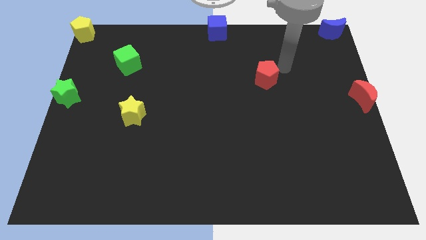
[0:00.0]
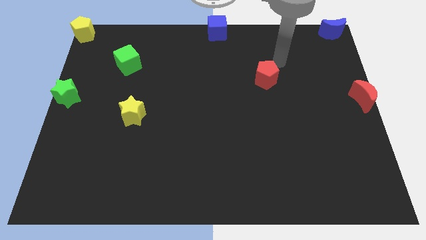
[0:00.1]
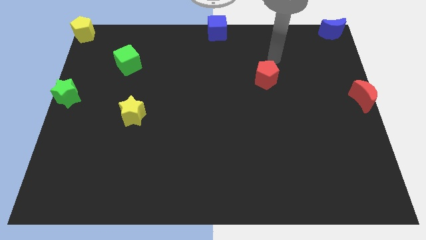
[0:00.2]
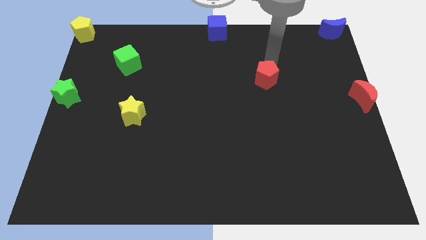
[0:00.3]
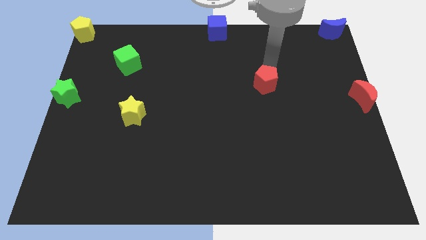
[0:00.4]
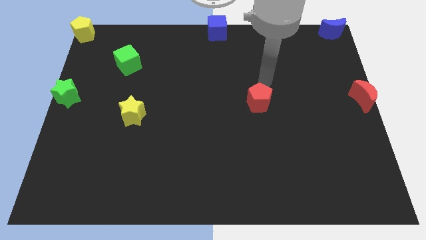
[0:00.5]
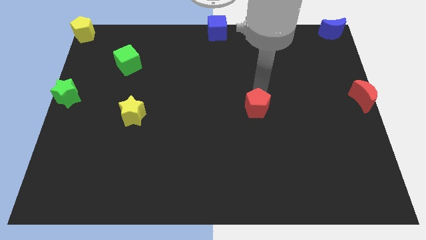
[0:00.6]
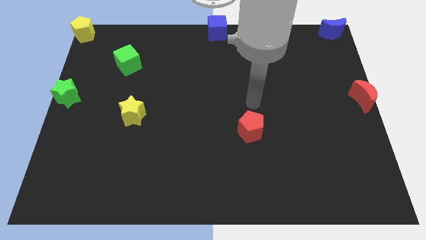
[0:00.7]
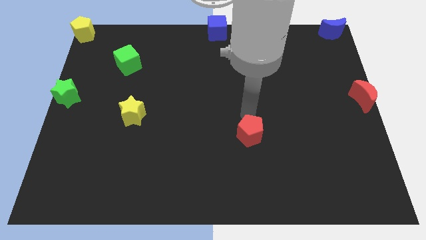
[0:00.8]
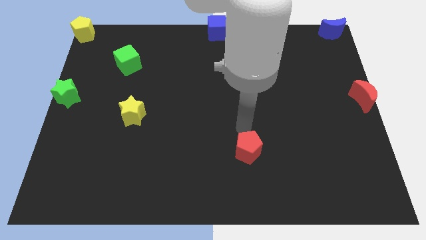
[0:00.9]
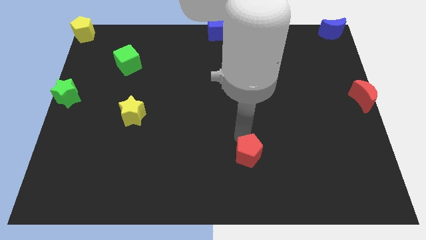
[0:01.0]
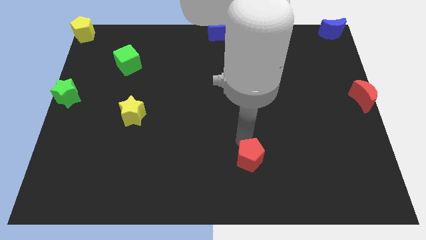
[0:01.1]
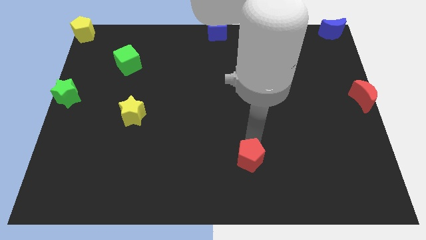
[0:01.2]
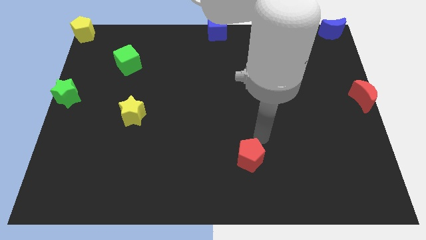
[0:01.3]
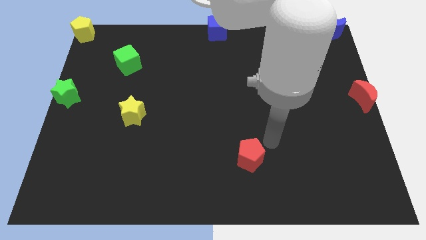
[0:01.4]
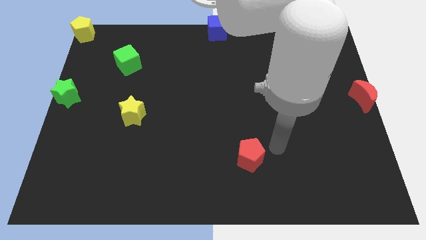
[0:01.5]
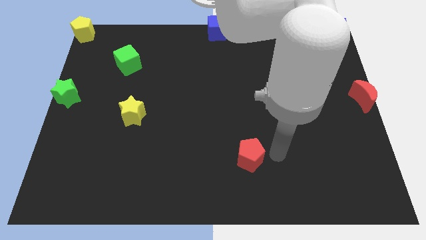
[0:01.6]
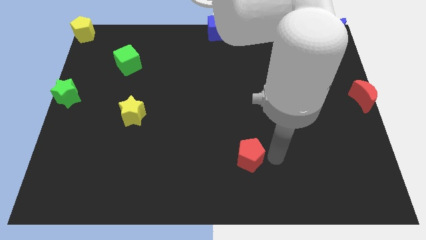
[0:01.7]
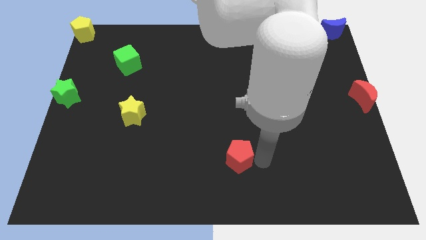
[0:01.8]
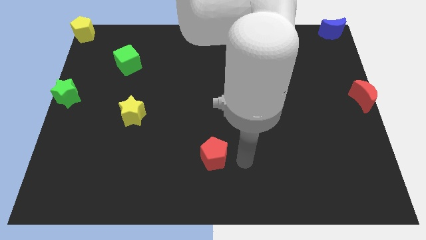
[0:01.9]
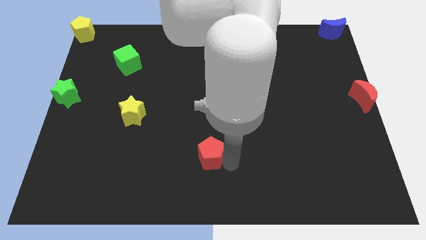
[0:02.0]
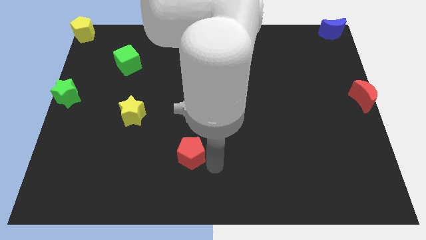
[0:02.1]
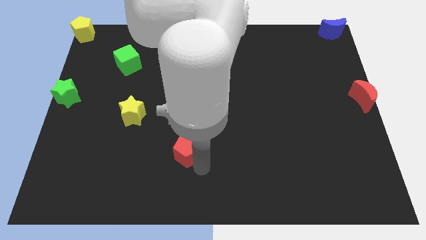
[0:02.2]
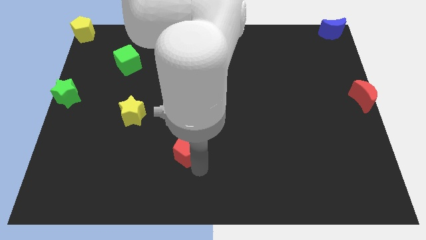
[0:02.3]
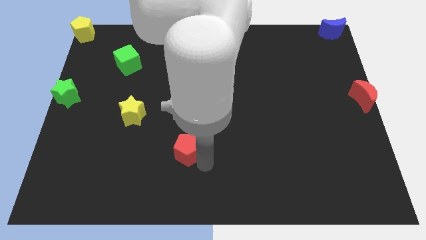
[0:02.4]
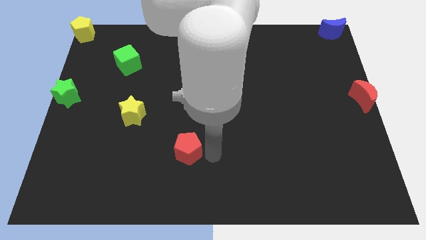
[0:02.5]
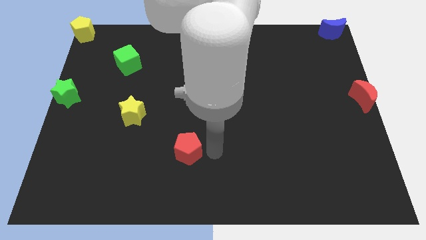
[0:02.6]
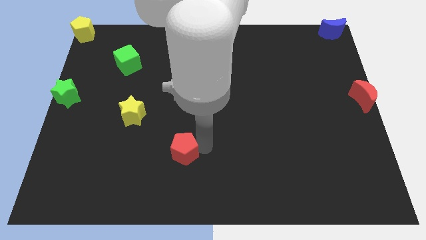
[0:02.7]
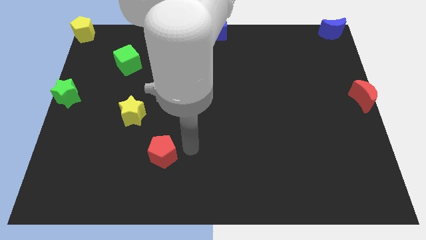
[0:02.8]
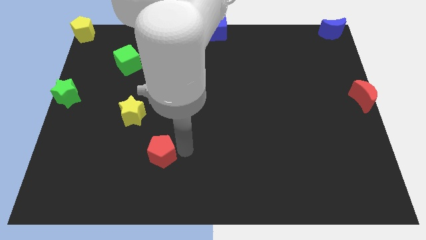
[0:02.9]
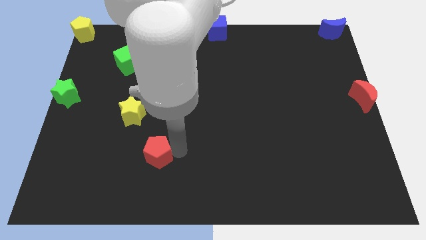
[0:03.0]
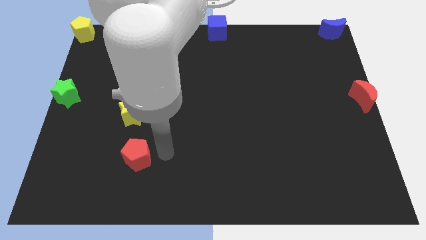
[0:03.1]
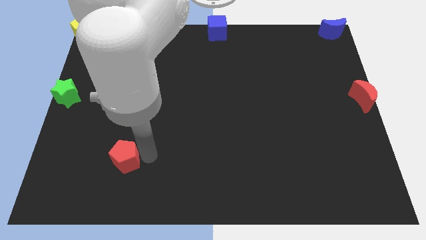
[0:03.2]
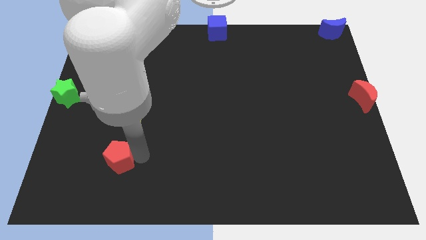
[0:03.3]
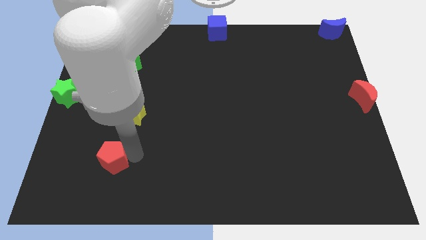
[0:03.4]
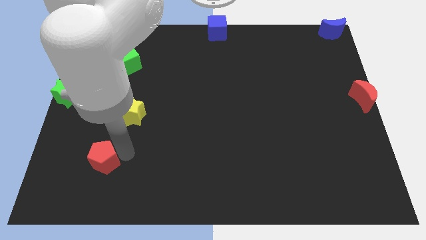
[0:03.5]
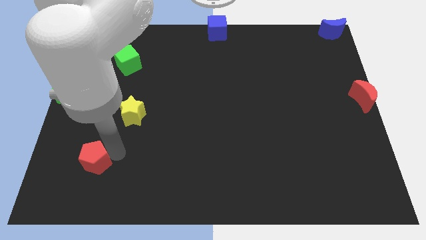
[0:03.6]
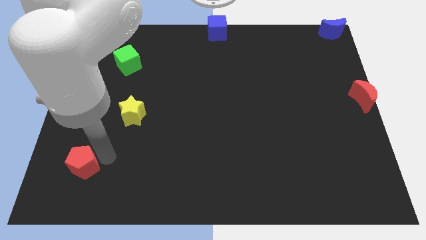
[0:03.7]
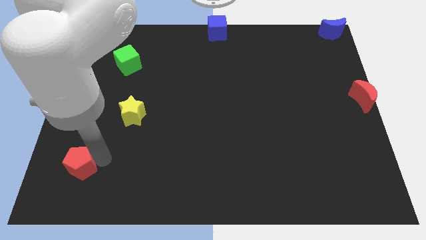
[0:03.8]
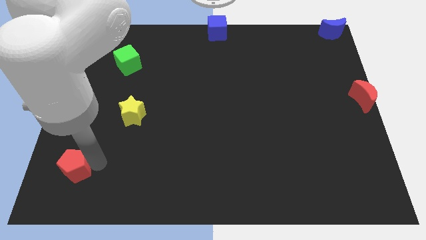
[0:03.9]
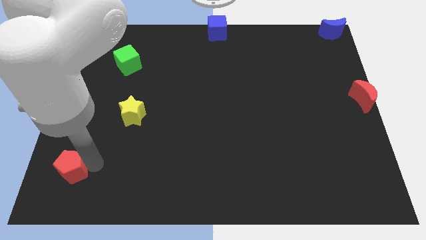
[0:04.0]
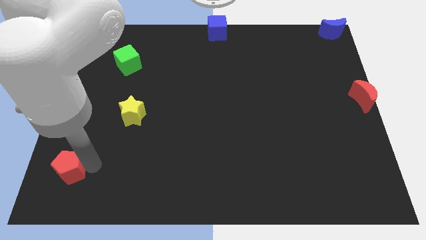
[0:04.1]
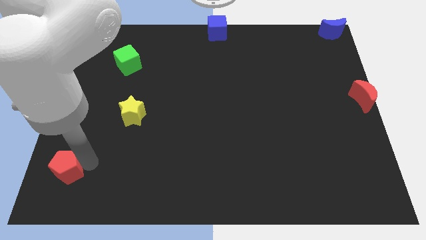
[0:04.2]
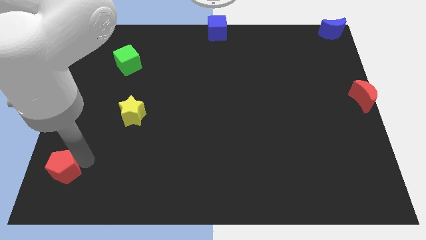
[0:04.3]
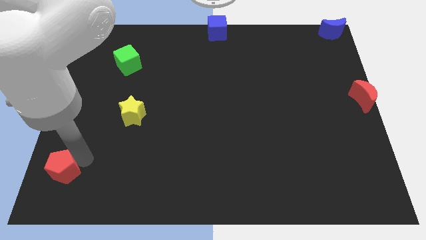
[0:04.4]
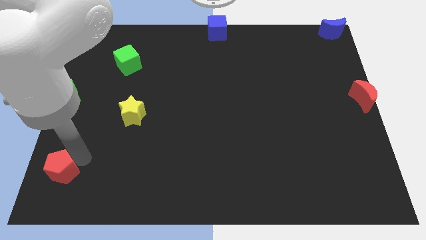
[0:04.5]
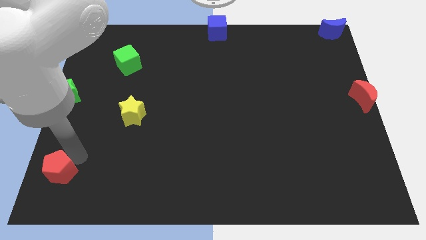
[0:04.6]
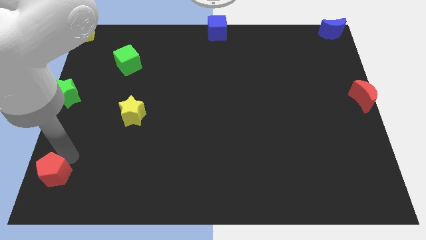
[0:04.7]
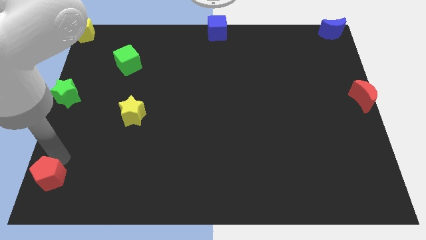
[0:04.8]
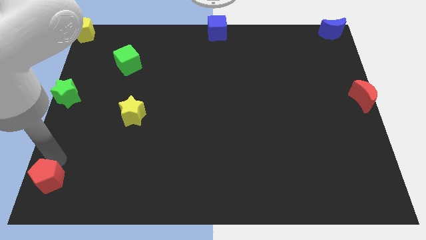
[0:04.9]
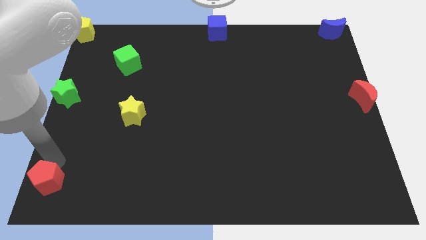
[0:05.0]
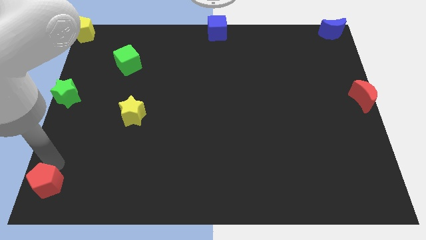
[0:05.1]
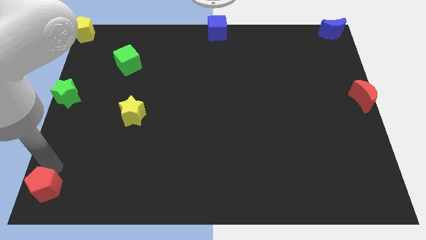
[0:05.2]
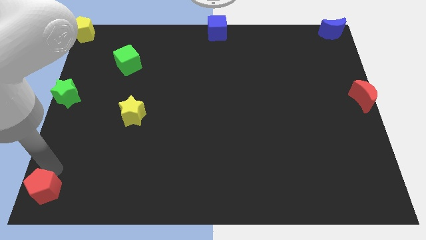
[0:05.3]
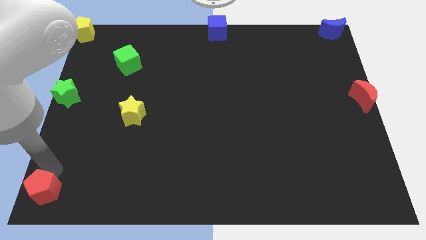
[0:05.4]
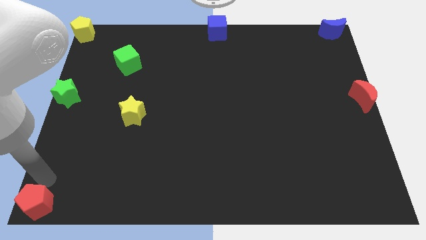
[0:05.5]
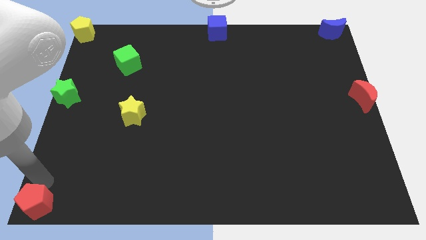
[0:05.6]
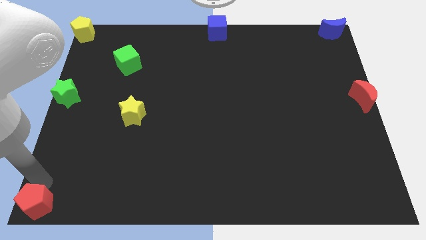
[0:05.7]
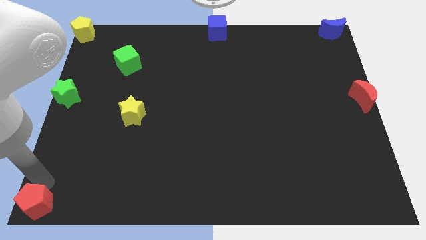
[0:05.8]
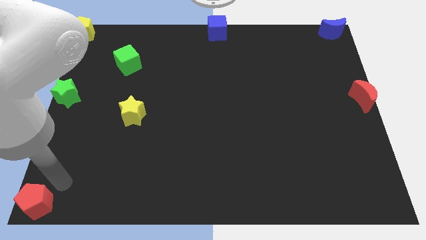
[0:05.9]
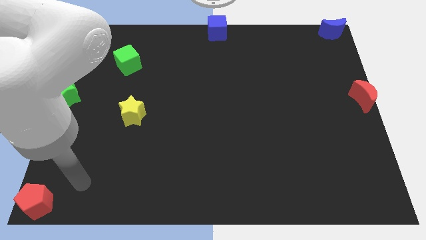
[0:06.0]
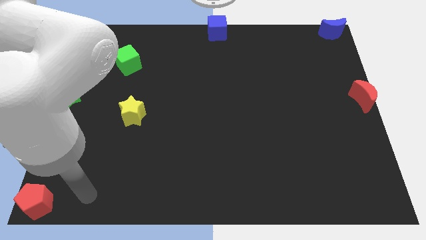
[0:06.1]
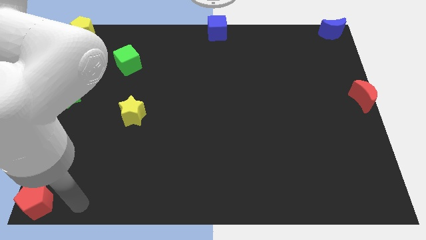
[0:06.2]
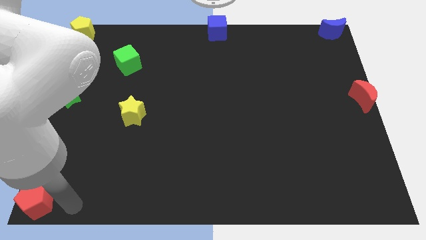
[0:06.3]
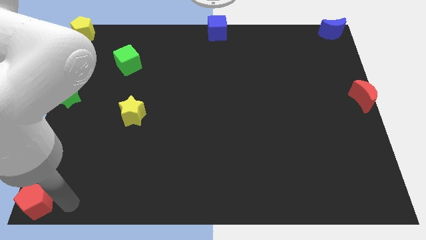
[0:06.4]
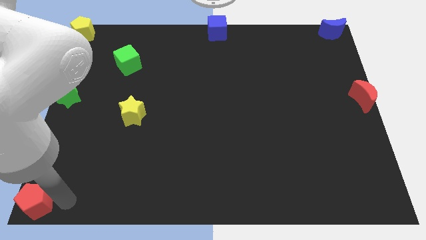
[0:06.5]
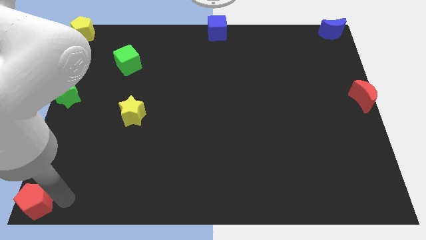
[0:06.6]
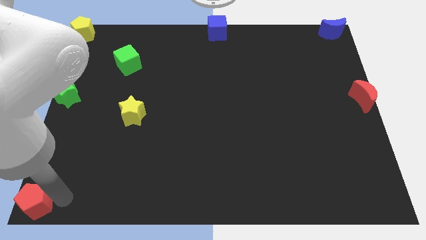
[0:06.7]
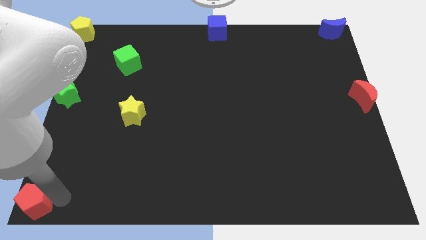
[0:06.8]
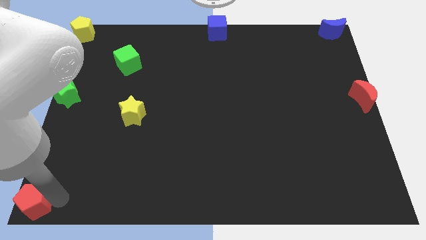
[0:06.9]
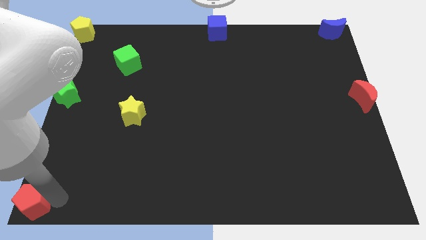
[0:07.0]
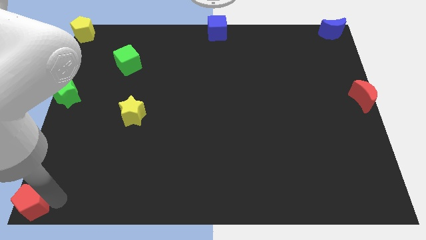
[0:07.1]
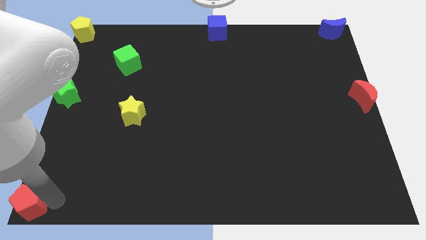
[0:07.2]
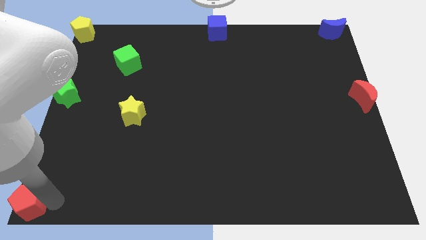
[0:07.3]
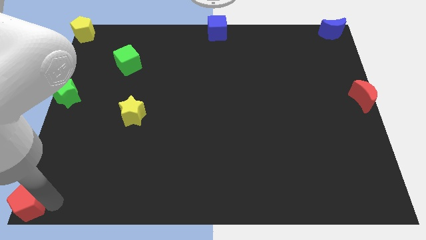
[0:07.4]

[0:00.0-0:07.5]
move red pentagon on the bottom left corner of the board

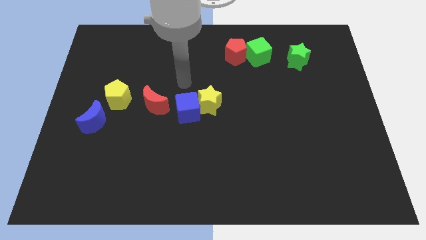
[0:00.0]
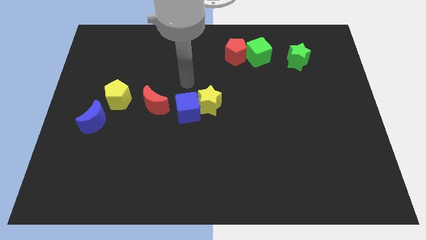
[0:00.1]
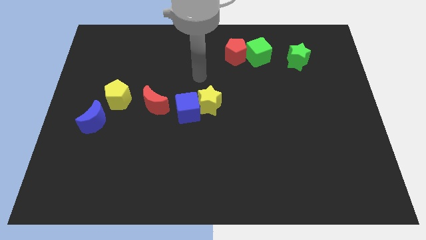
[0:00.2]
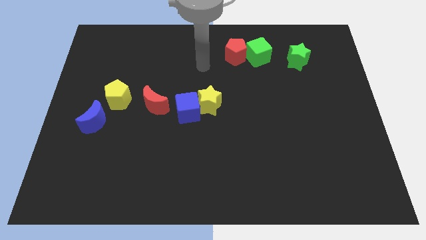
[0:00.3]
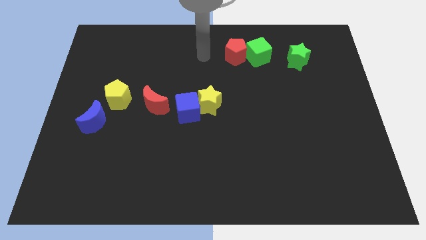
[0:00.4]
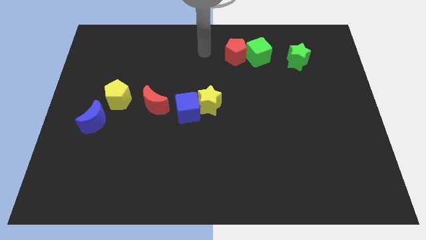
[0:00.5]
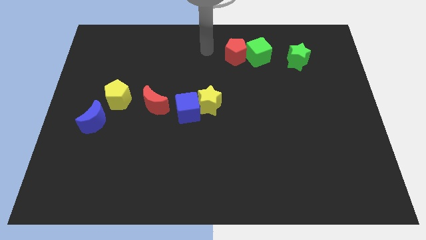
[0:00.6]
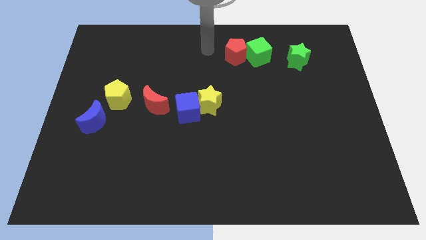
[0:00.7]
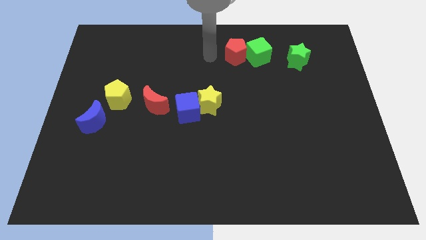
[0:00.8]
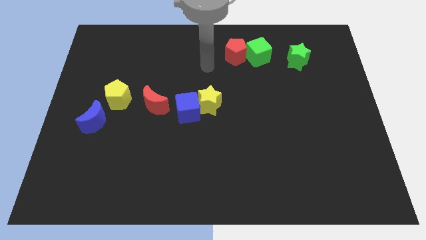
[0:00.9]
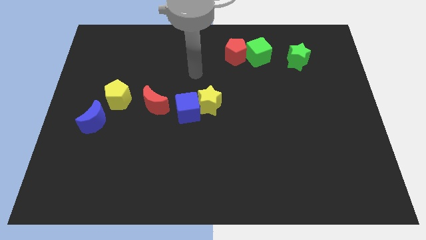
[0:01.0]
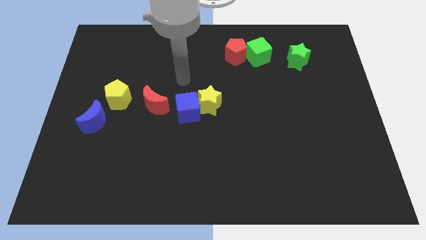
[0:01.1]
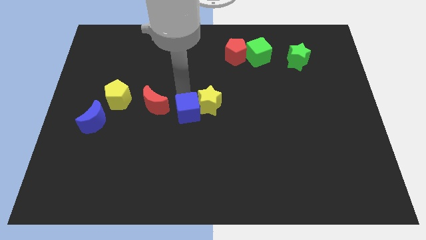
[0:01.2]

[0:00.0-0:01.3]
point your arm at the top of the blue cube

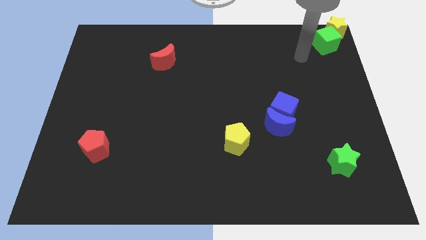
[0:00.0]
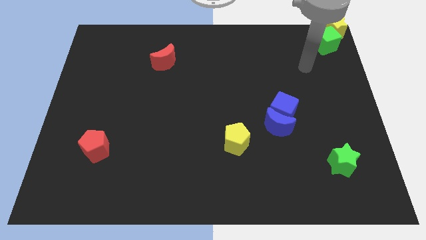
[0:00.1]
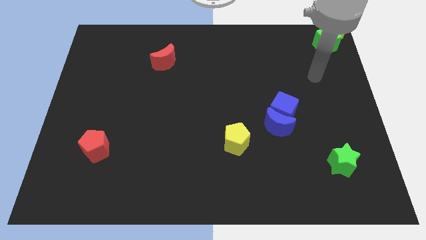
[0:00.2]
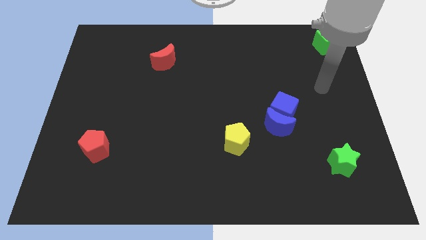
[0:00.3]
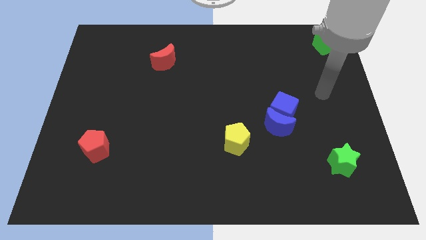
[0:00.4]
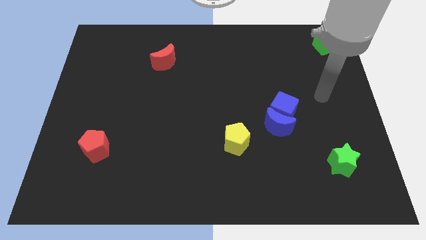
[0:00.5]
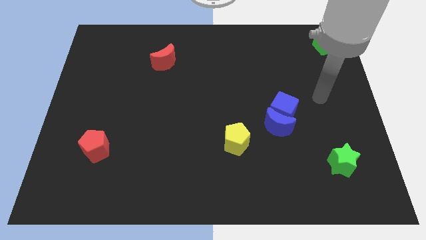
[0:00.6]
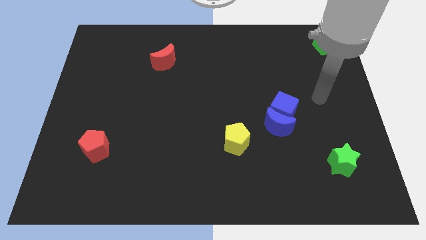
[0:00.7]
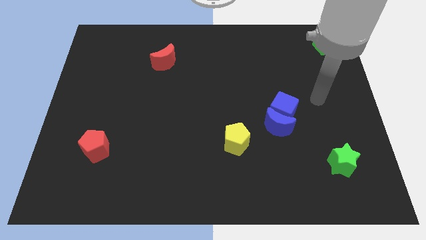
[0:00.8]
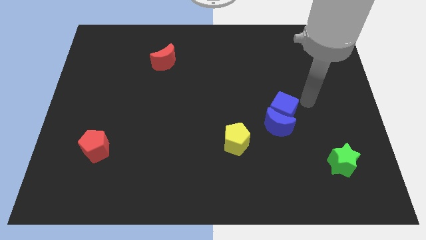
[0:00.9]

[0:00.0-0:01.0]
point your arm at the top right side of the blue cube
